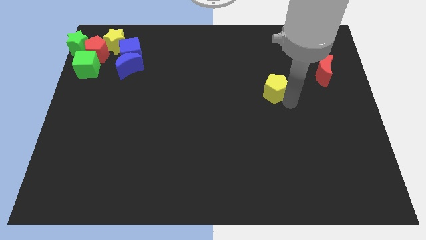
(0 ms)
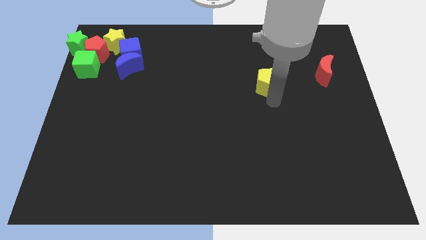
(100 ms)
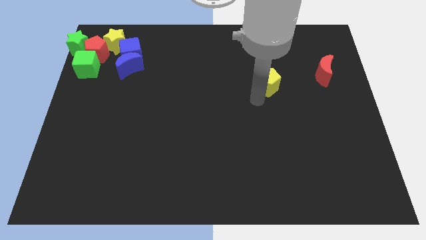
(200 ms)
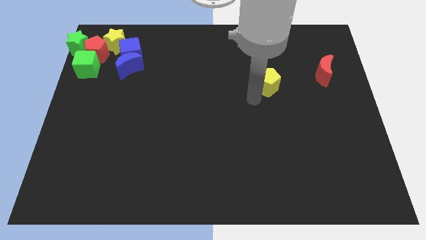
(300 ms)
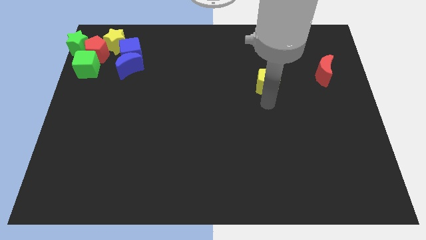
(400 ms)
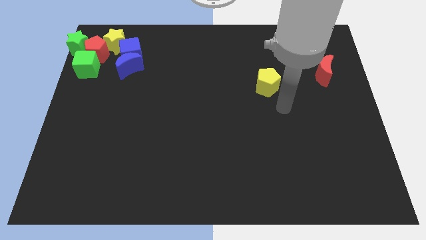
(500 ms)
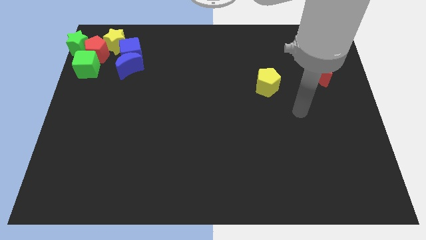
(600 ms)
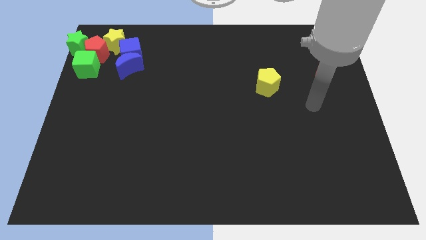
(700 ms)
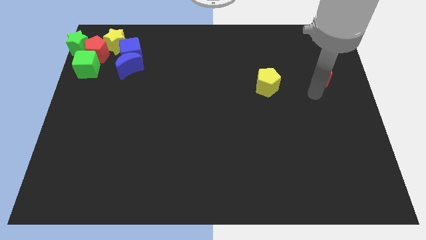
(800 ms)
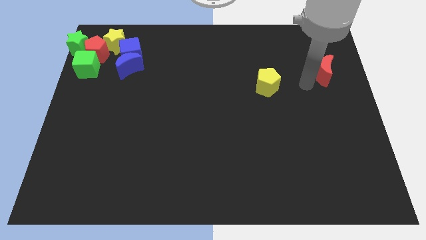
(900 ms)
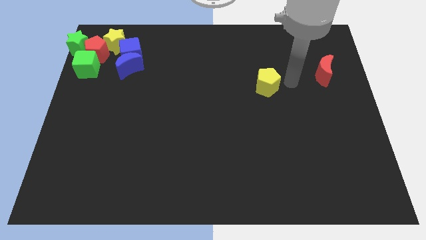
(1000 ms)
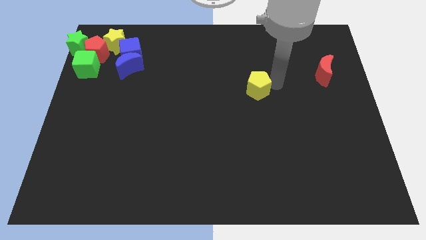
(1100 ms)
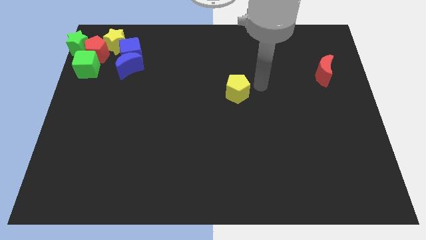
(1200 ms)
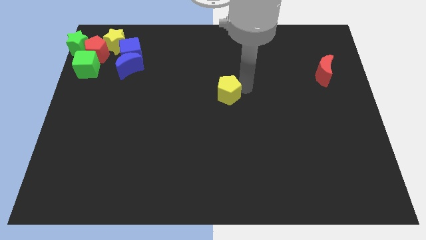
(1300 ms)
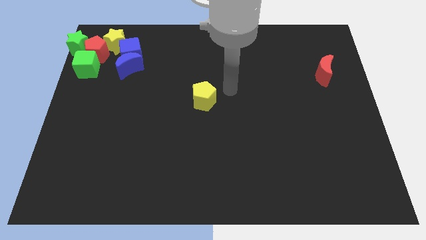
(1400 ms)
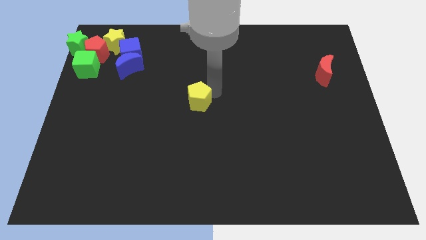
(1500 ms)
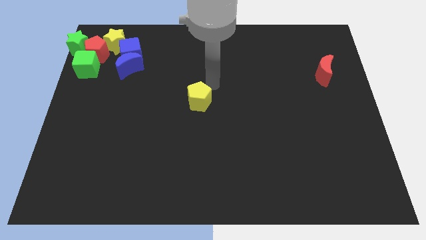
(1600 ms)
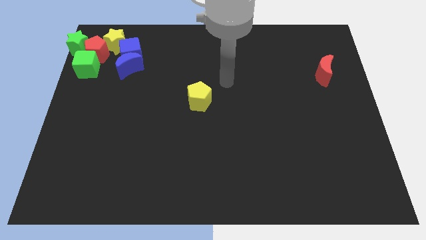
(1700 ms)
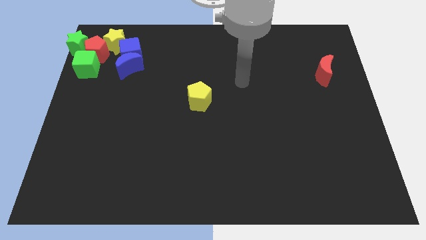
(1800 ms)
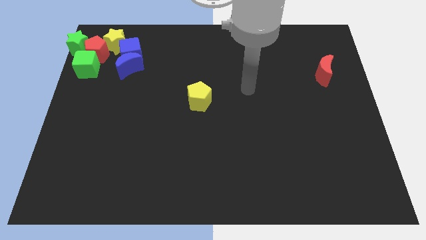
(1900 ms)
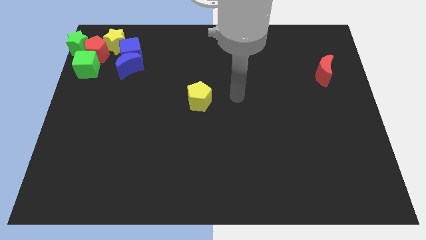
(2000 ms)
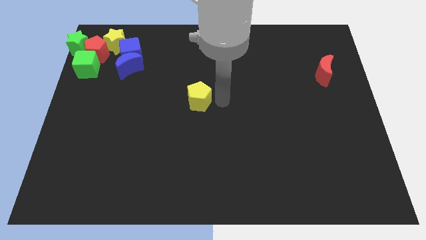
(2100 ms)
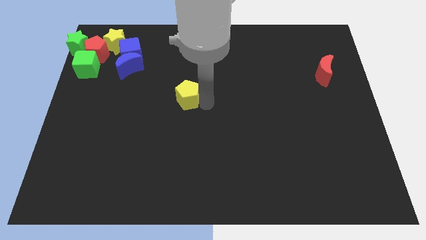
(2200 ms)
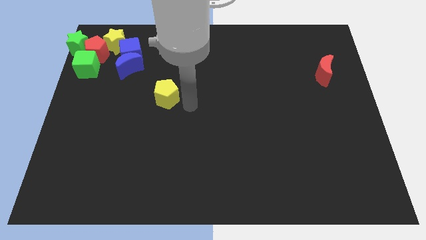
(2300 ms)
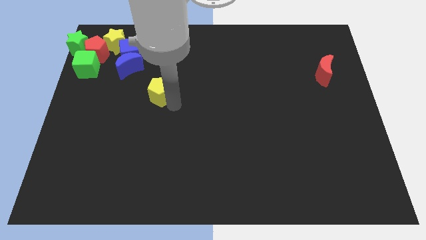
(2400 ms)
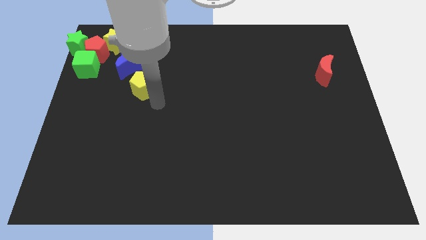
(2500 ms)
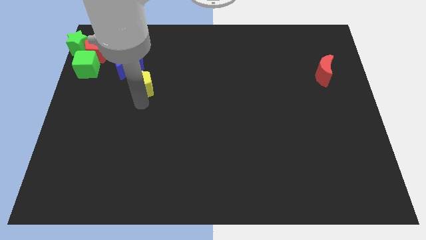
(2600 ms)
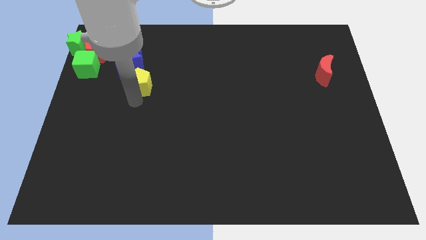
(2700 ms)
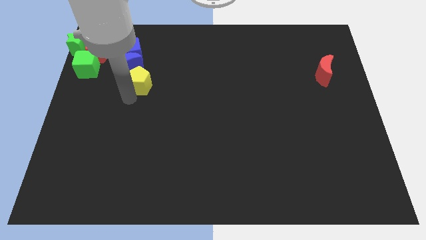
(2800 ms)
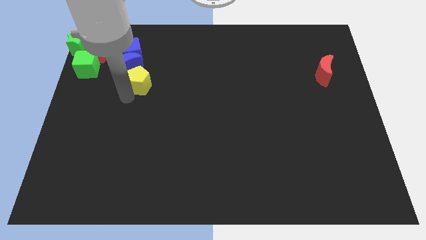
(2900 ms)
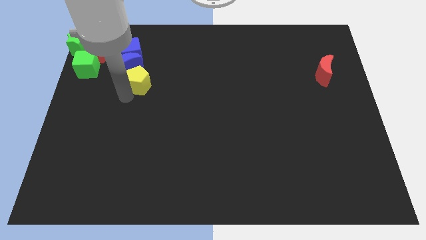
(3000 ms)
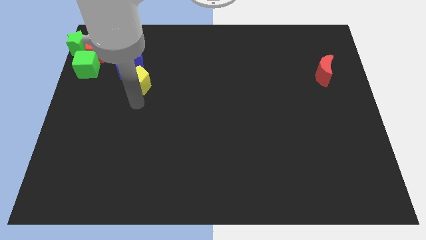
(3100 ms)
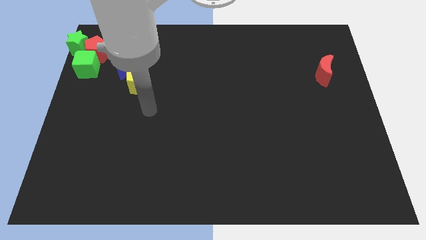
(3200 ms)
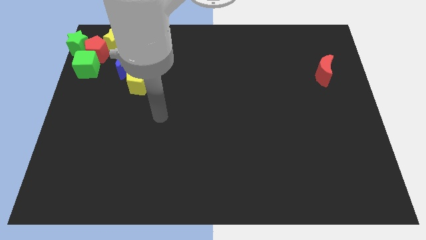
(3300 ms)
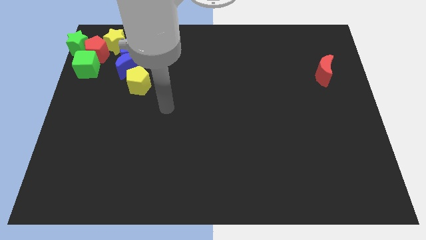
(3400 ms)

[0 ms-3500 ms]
move the yellow pentagon inside to the blue crescent

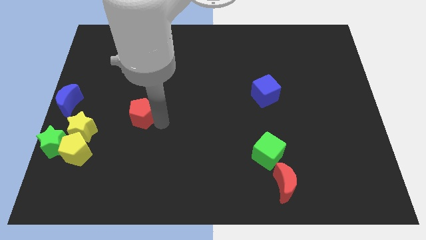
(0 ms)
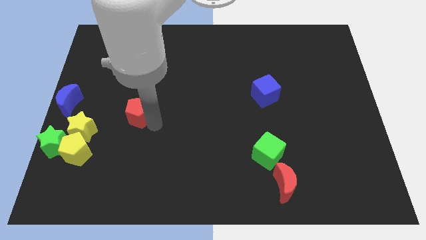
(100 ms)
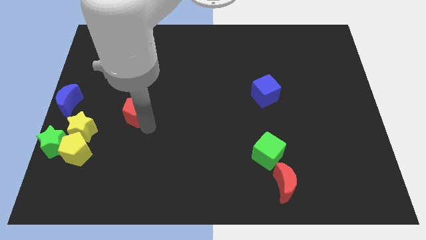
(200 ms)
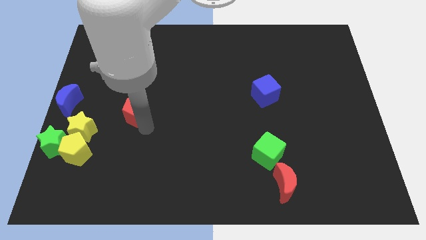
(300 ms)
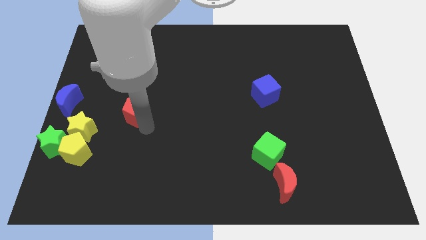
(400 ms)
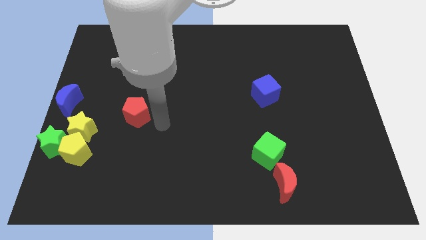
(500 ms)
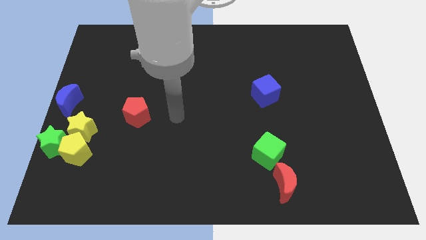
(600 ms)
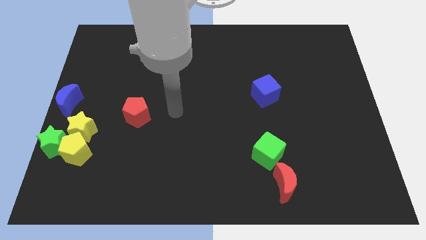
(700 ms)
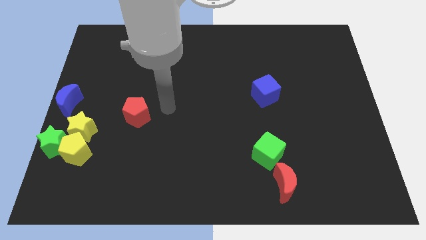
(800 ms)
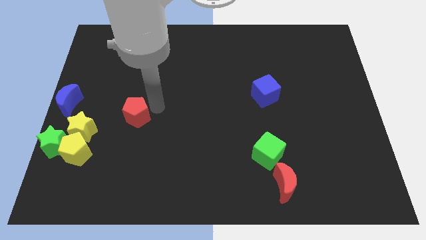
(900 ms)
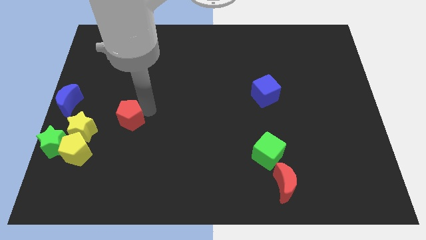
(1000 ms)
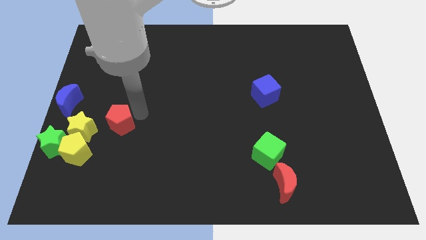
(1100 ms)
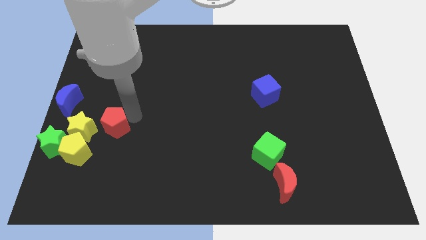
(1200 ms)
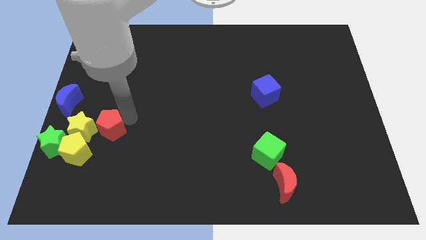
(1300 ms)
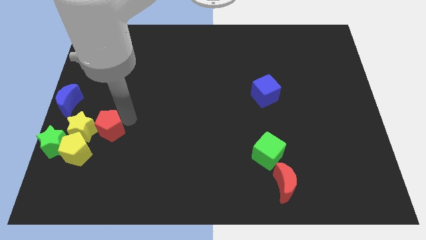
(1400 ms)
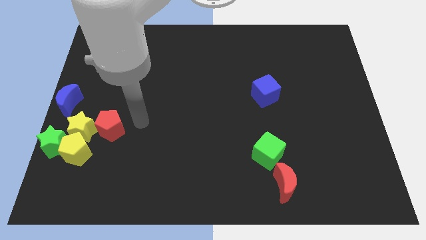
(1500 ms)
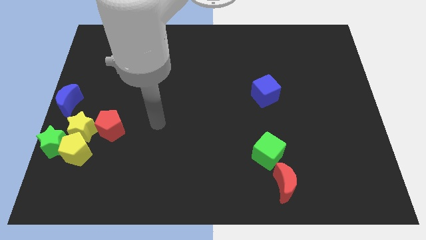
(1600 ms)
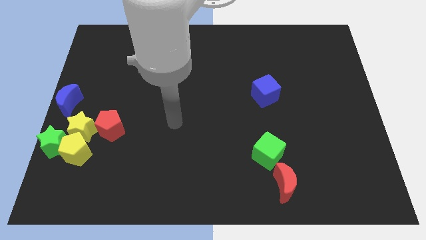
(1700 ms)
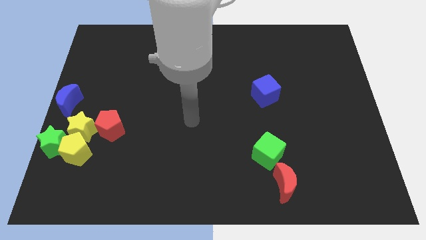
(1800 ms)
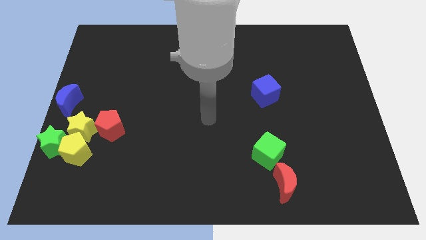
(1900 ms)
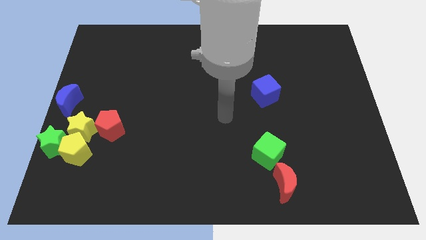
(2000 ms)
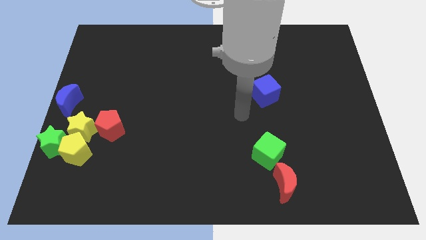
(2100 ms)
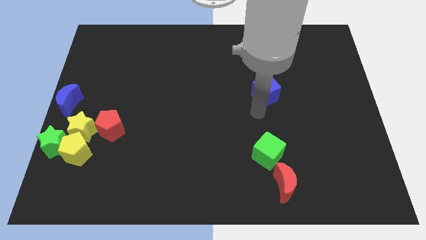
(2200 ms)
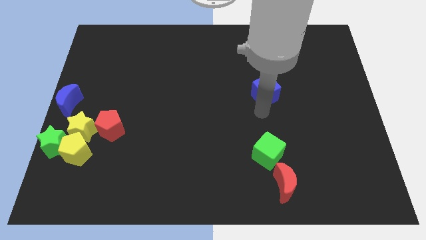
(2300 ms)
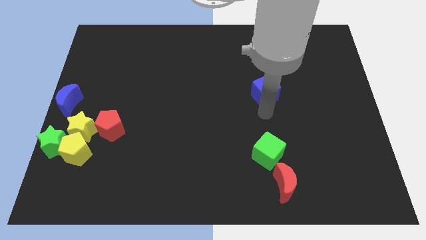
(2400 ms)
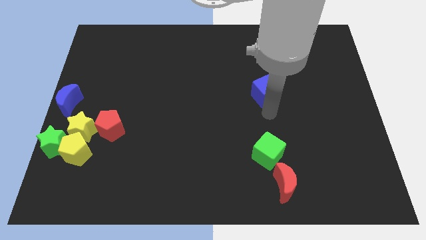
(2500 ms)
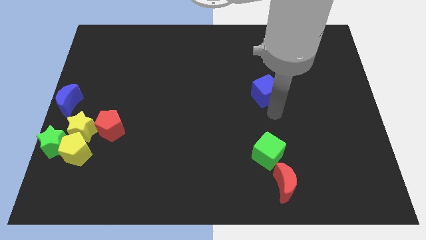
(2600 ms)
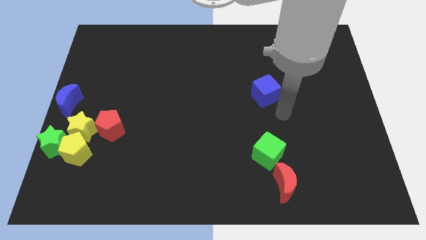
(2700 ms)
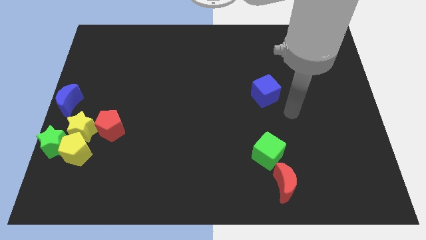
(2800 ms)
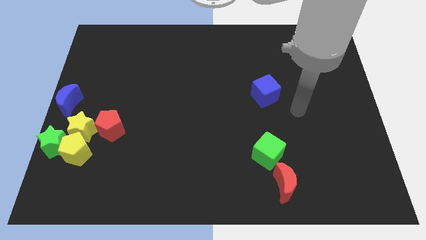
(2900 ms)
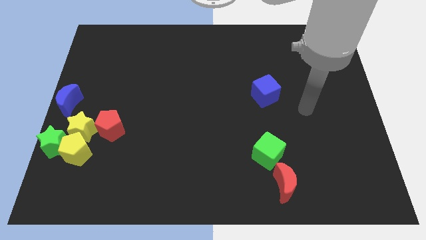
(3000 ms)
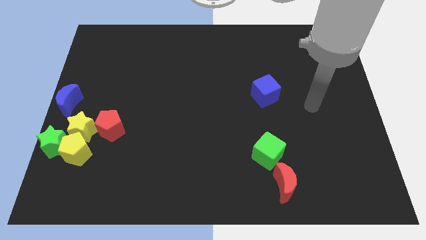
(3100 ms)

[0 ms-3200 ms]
move red pentagon into the group of blocks

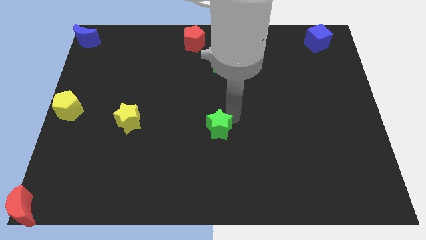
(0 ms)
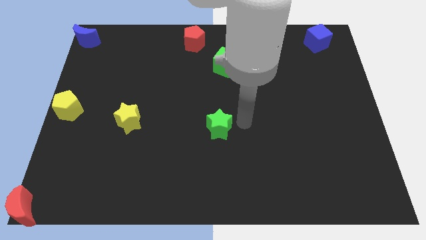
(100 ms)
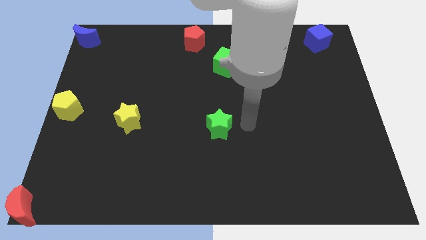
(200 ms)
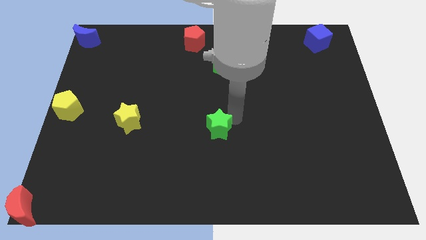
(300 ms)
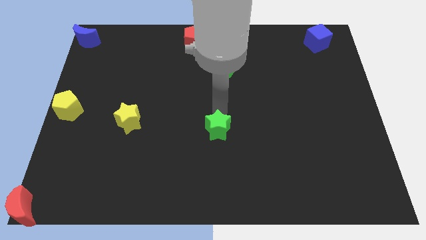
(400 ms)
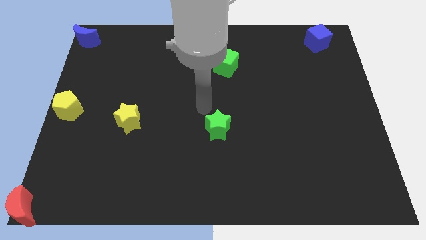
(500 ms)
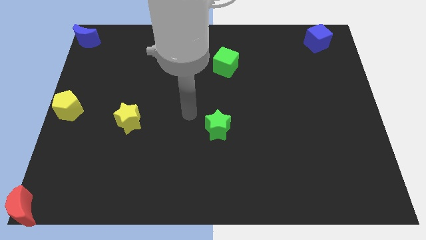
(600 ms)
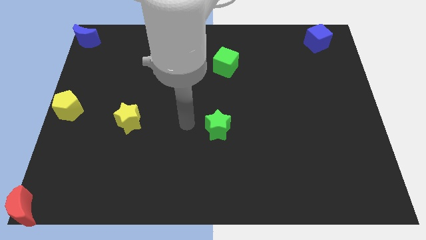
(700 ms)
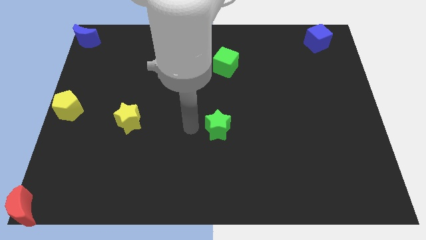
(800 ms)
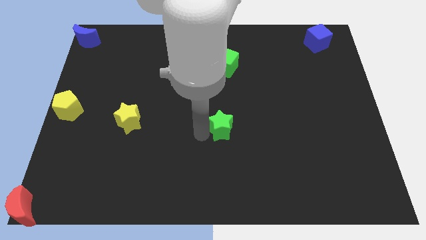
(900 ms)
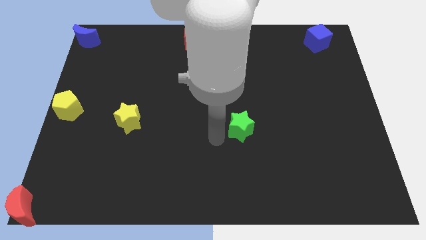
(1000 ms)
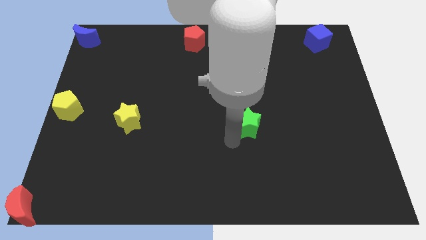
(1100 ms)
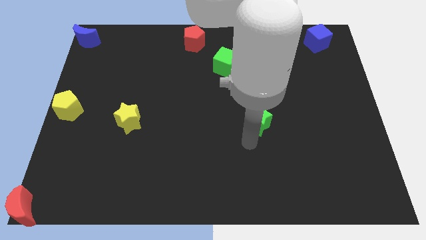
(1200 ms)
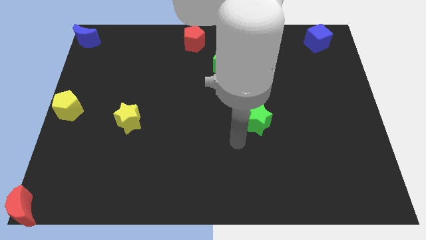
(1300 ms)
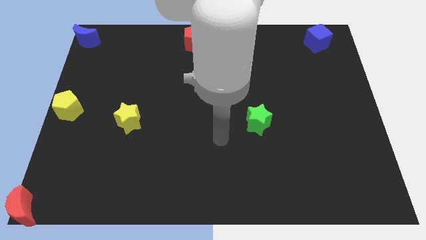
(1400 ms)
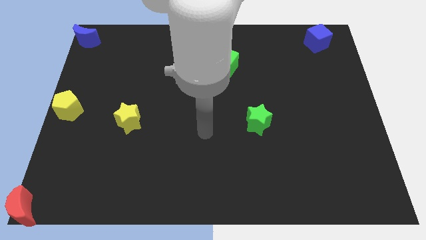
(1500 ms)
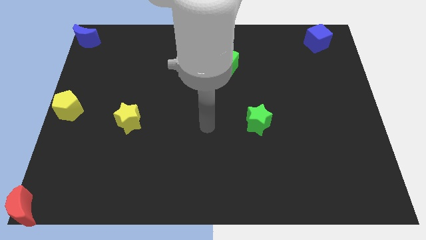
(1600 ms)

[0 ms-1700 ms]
move the green star towards the center right

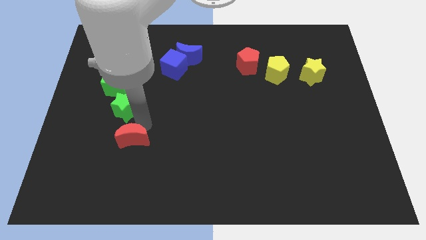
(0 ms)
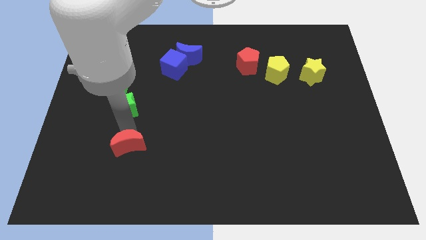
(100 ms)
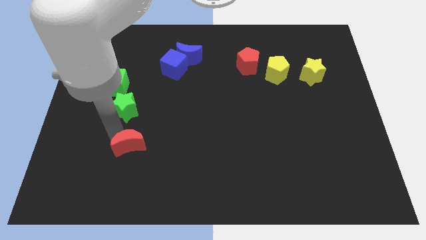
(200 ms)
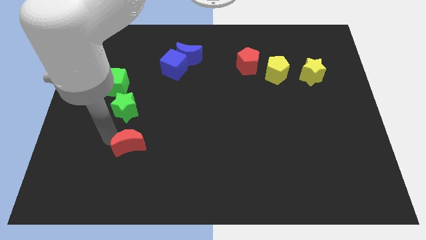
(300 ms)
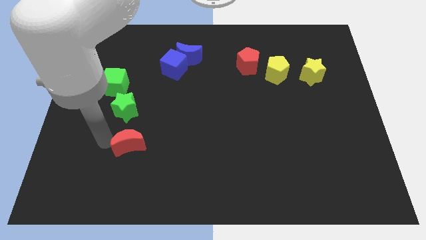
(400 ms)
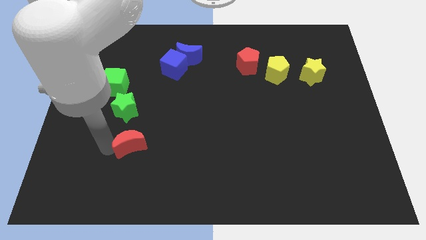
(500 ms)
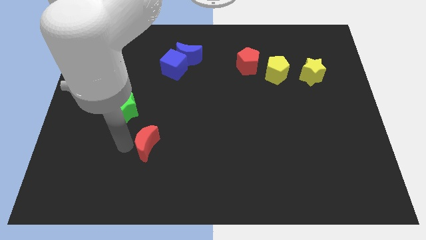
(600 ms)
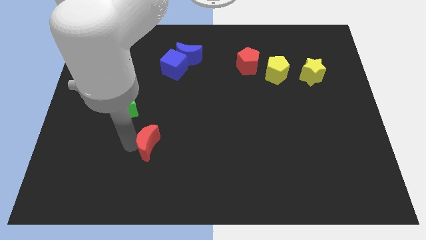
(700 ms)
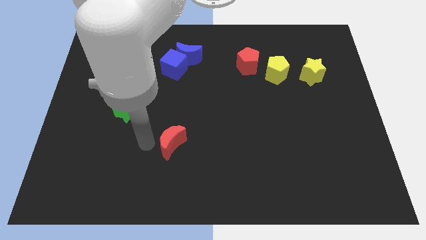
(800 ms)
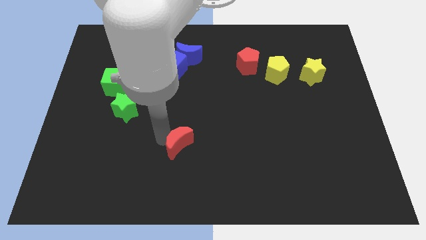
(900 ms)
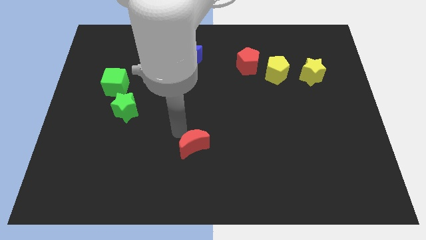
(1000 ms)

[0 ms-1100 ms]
move the red crescent slightly right to the board
